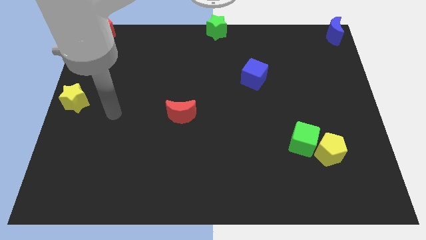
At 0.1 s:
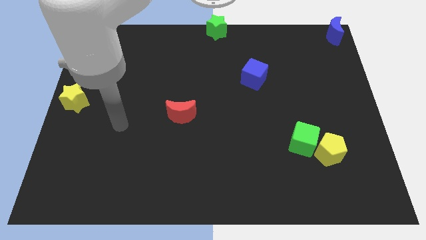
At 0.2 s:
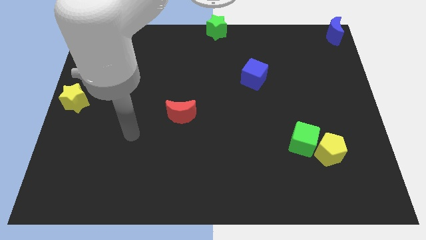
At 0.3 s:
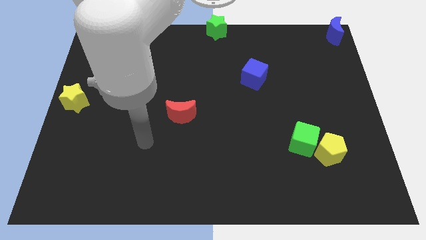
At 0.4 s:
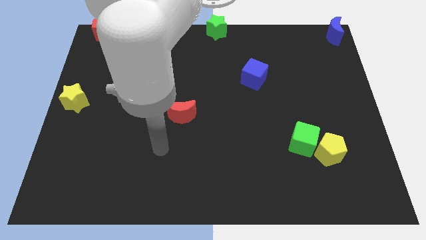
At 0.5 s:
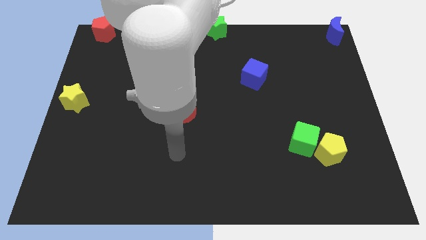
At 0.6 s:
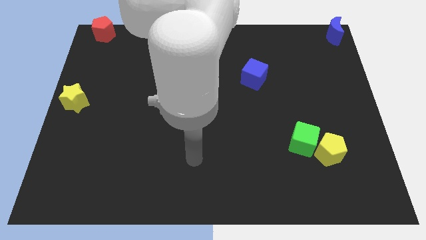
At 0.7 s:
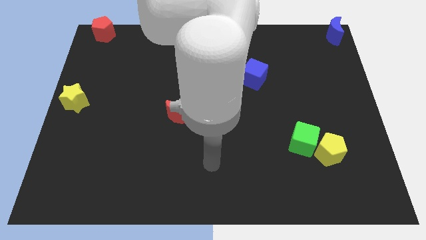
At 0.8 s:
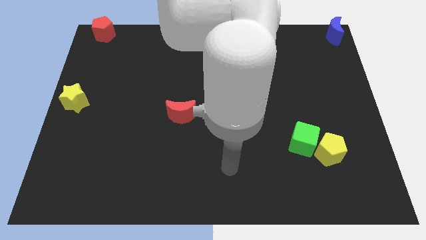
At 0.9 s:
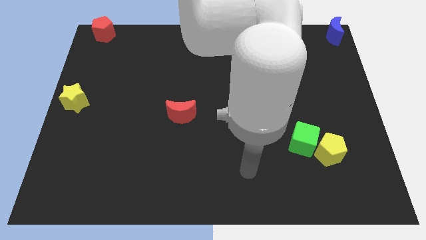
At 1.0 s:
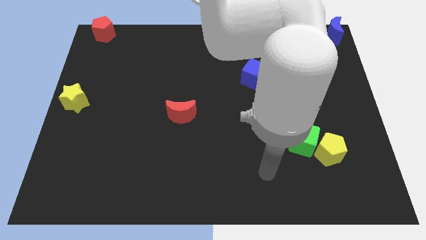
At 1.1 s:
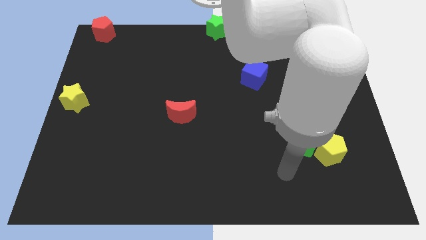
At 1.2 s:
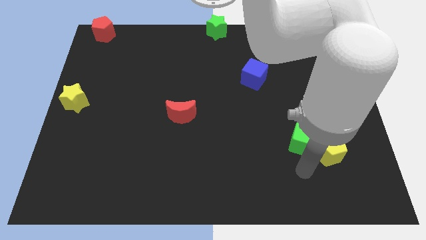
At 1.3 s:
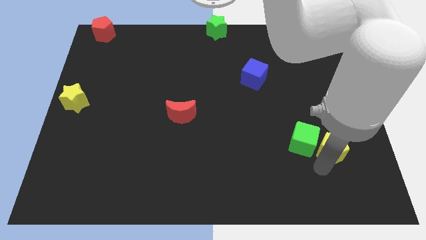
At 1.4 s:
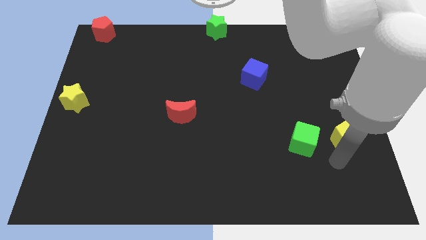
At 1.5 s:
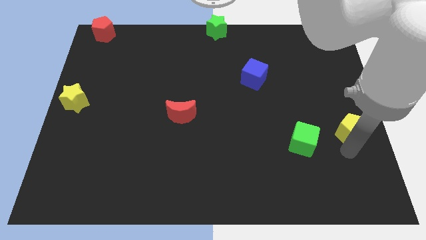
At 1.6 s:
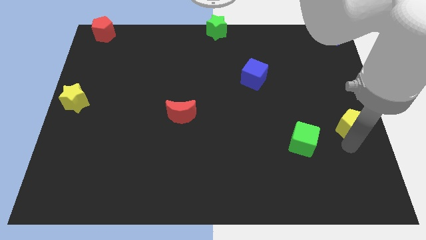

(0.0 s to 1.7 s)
move the yellow pentagon up slightly

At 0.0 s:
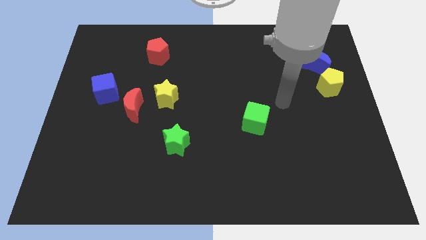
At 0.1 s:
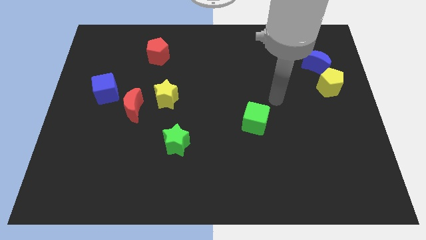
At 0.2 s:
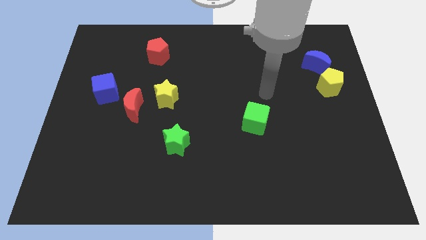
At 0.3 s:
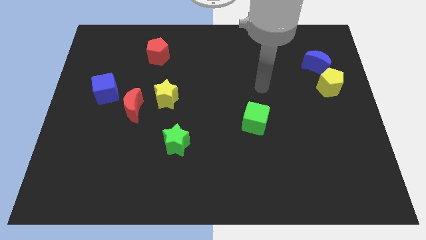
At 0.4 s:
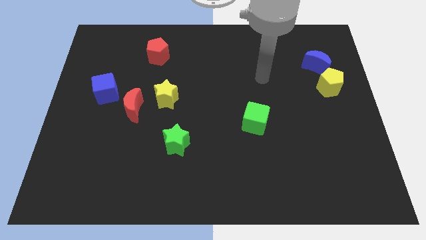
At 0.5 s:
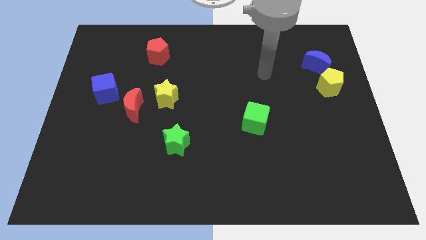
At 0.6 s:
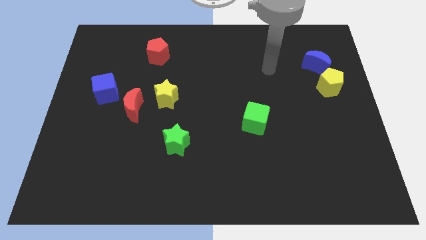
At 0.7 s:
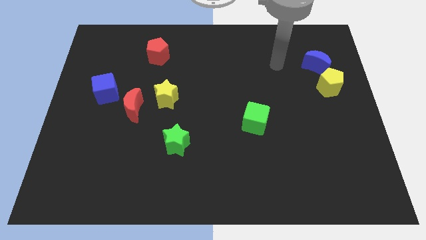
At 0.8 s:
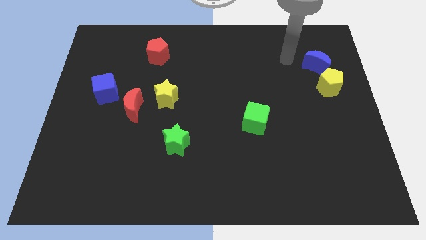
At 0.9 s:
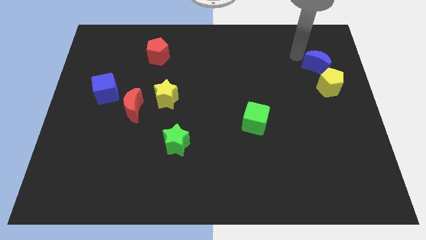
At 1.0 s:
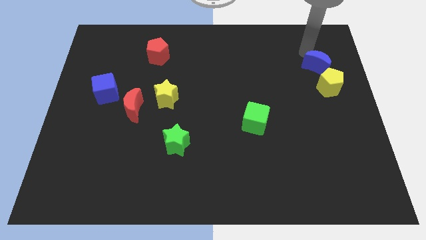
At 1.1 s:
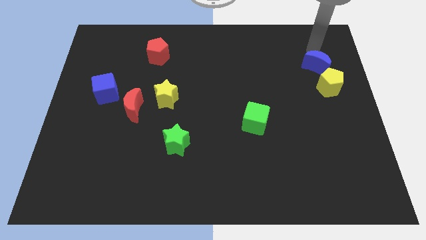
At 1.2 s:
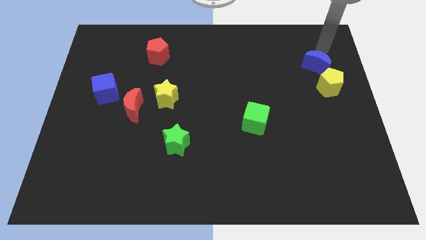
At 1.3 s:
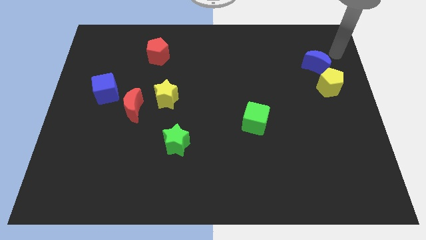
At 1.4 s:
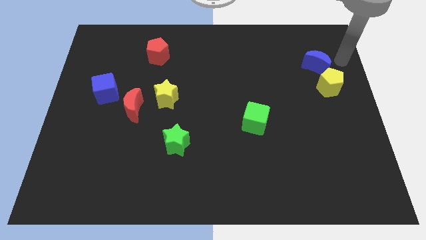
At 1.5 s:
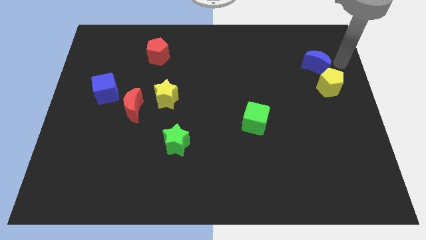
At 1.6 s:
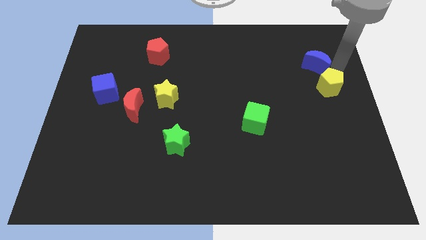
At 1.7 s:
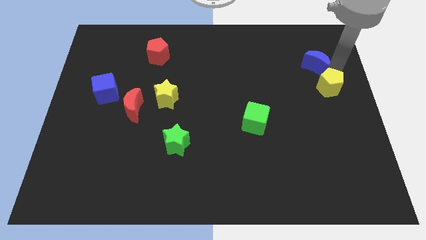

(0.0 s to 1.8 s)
place the arm to the right of the blue moon

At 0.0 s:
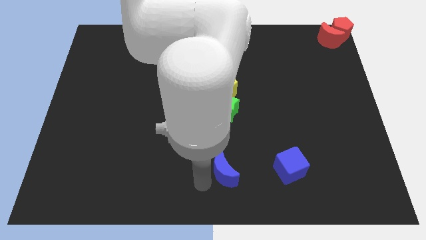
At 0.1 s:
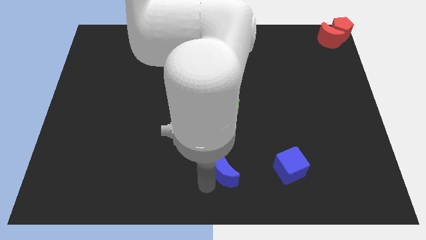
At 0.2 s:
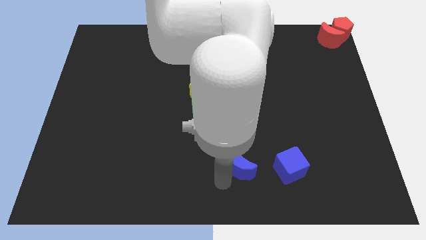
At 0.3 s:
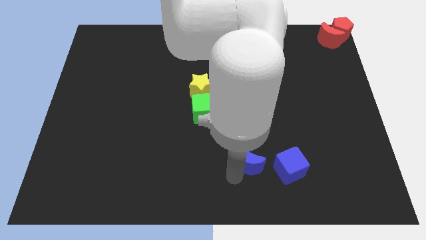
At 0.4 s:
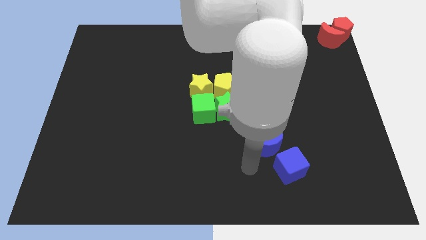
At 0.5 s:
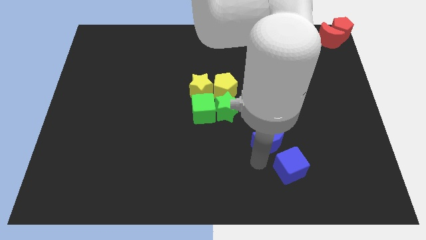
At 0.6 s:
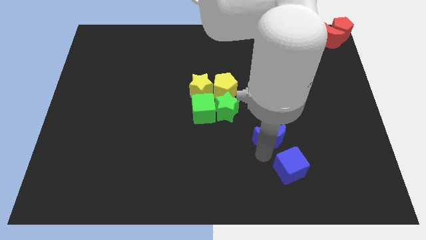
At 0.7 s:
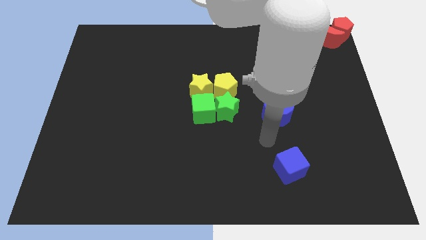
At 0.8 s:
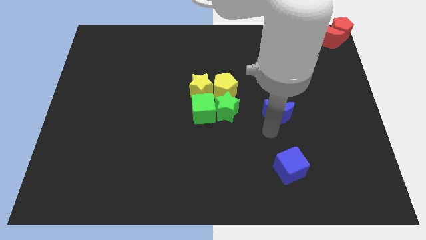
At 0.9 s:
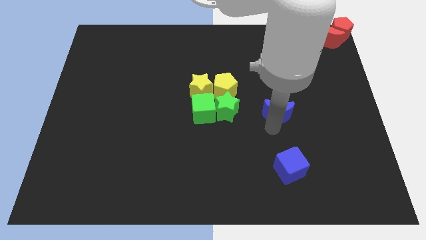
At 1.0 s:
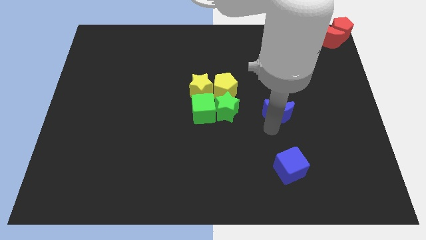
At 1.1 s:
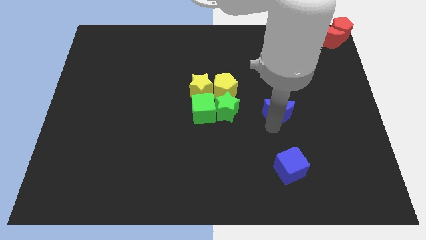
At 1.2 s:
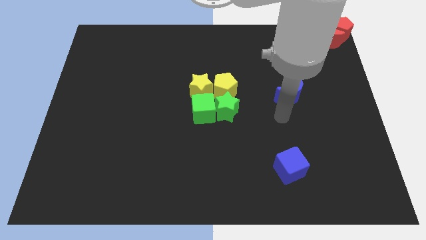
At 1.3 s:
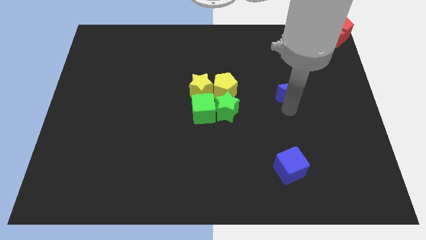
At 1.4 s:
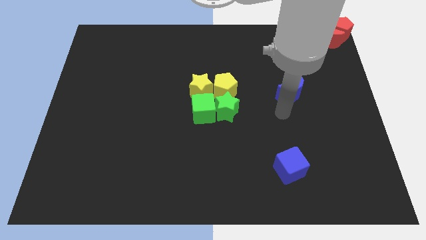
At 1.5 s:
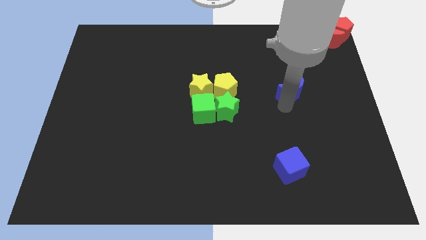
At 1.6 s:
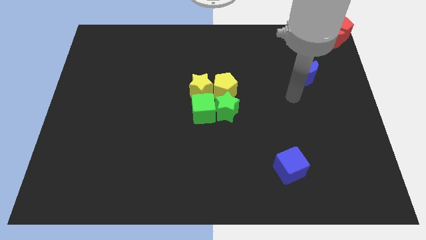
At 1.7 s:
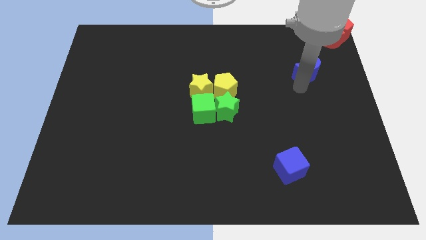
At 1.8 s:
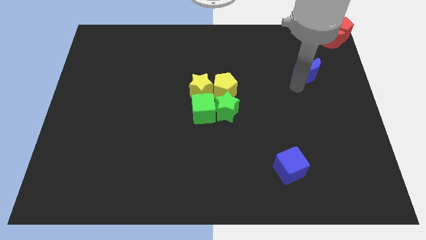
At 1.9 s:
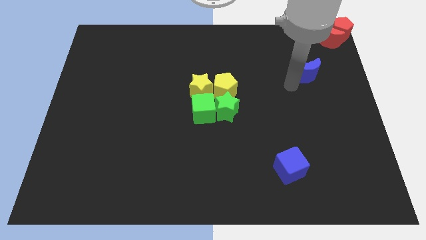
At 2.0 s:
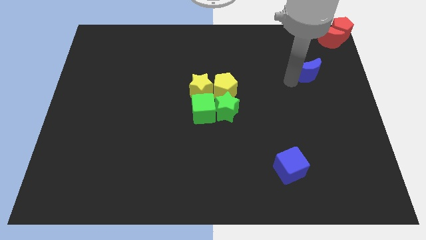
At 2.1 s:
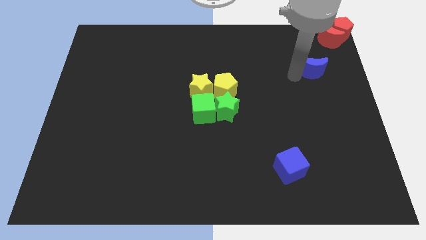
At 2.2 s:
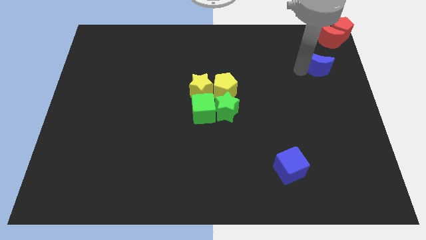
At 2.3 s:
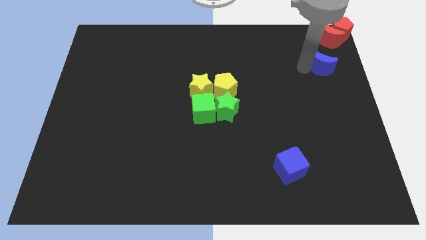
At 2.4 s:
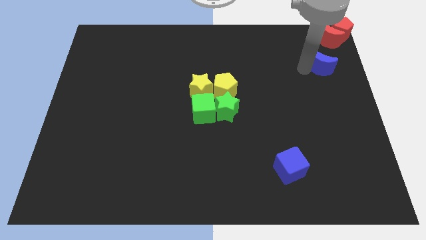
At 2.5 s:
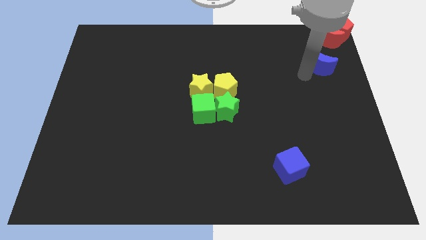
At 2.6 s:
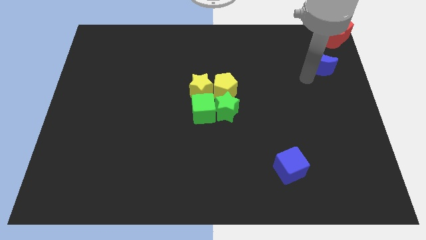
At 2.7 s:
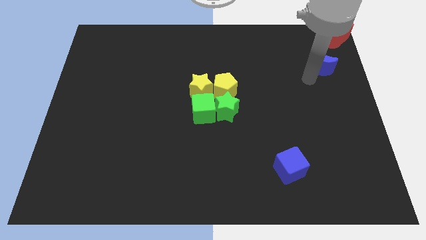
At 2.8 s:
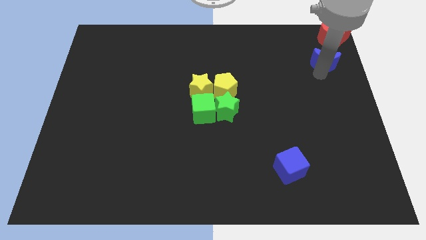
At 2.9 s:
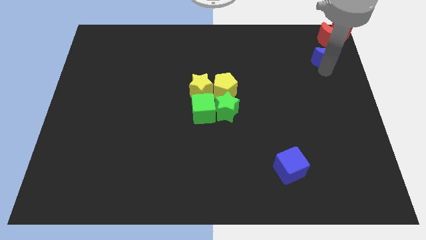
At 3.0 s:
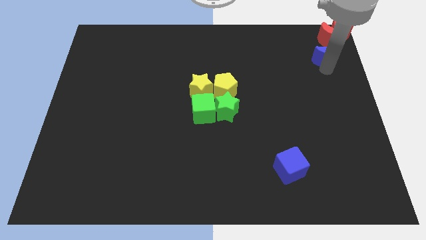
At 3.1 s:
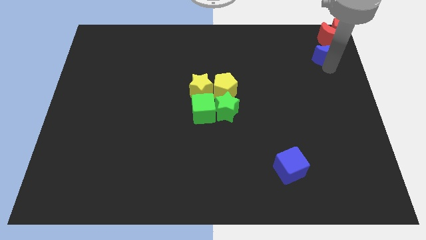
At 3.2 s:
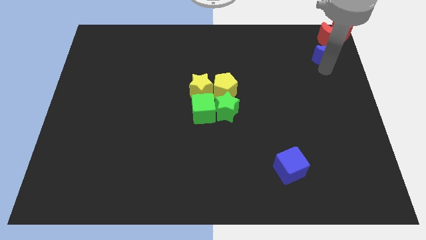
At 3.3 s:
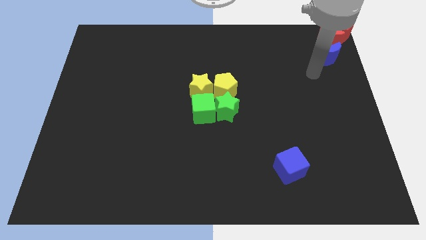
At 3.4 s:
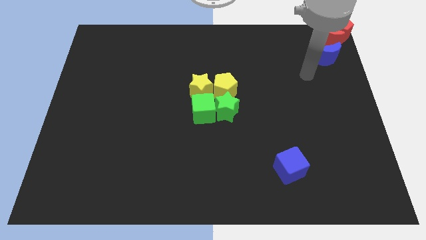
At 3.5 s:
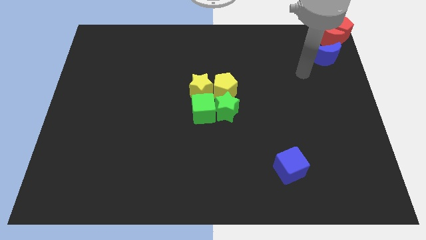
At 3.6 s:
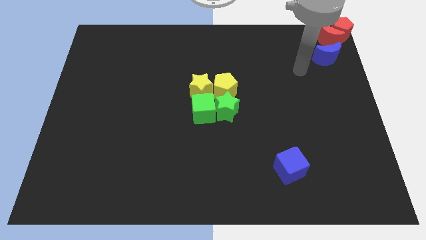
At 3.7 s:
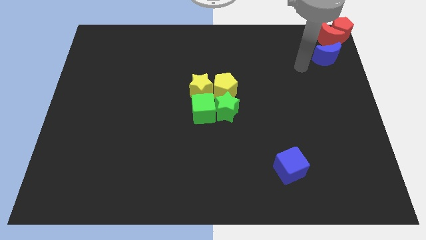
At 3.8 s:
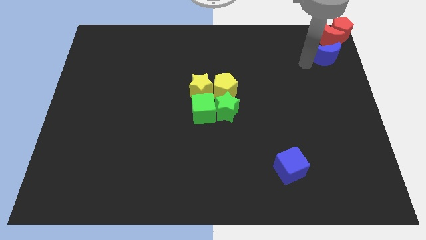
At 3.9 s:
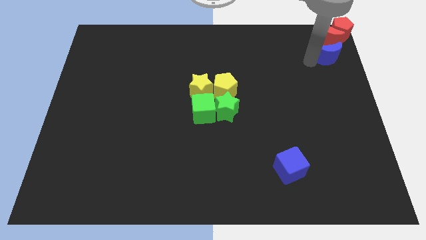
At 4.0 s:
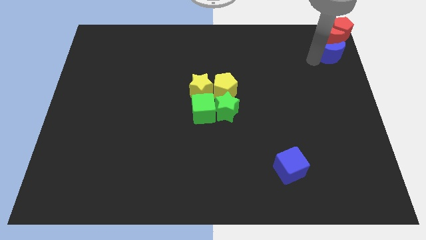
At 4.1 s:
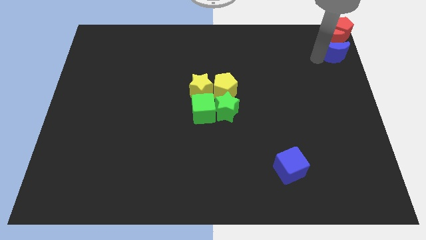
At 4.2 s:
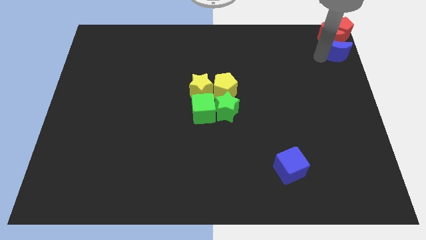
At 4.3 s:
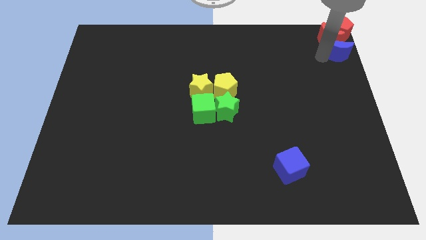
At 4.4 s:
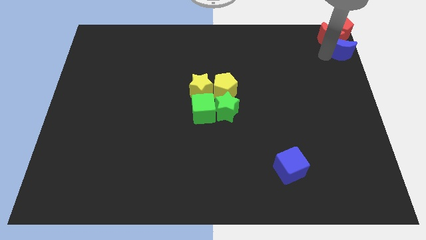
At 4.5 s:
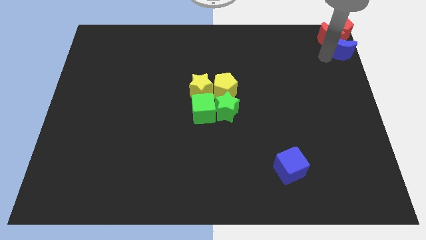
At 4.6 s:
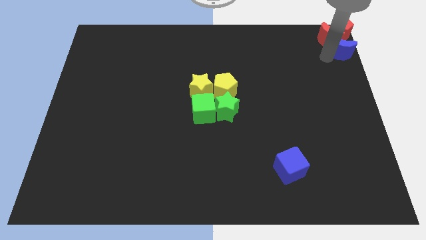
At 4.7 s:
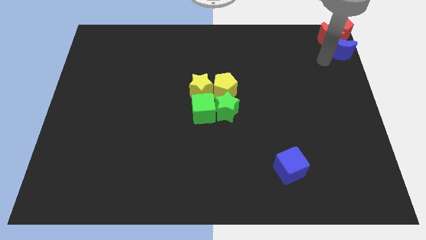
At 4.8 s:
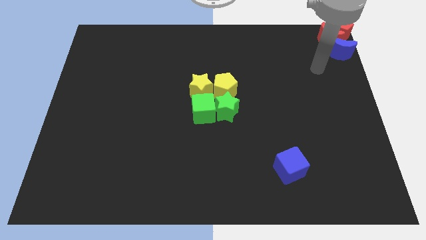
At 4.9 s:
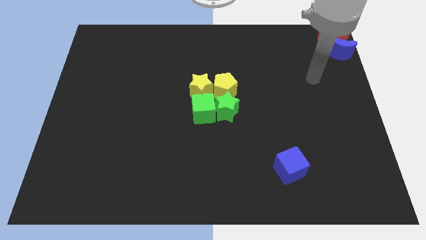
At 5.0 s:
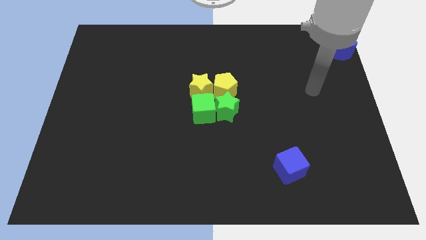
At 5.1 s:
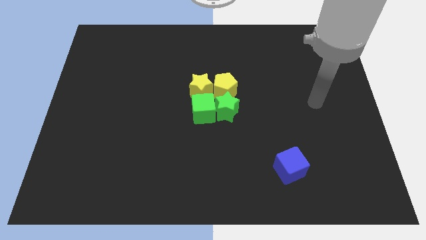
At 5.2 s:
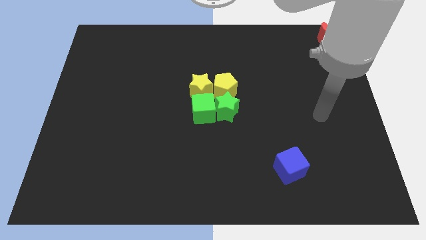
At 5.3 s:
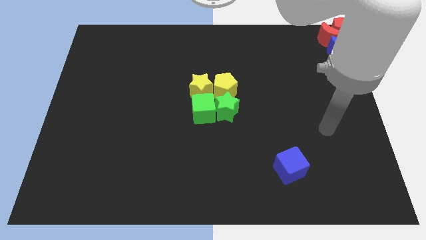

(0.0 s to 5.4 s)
push the blue crescent to the top right corner of the board

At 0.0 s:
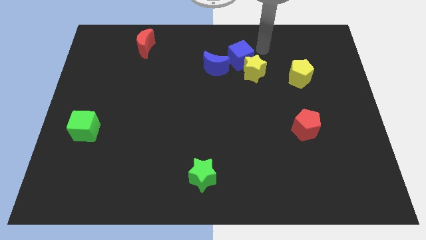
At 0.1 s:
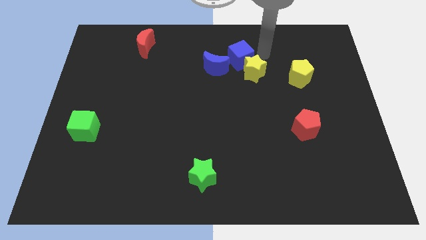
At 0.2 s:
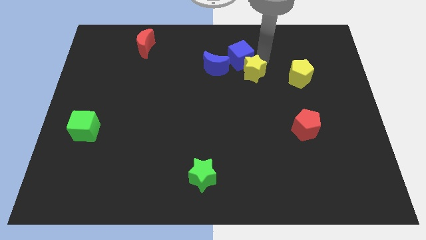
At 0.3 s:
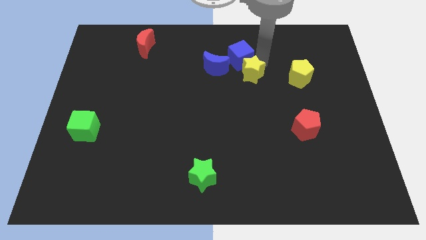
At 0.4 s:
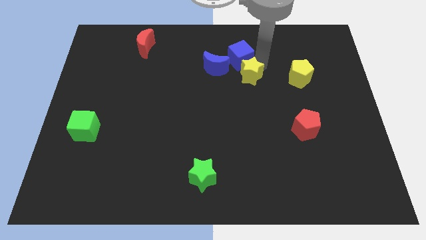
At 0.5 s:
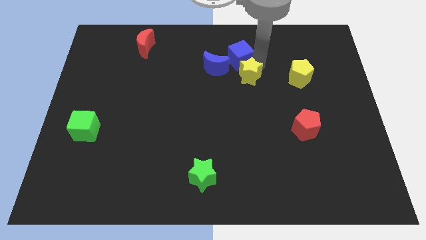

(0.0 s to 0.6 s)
push the yellow star downward
